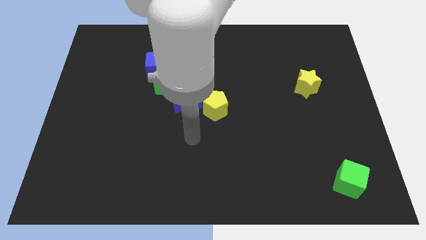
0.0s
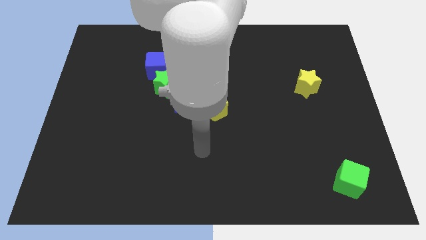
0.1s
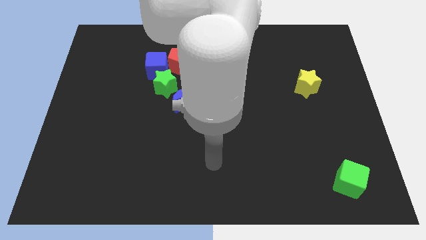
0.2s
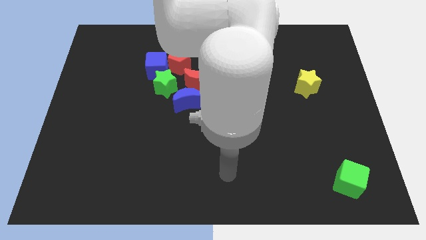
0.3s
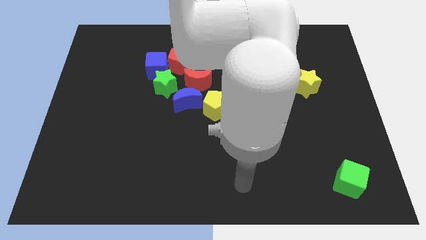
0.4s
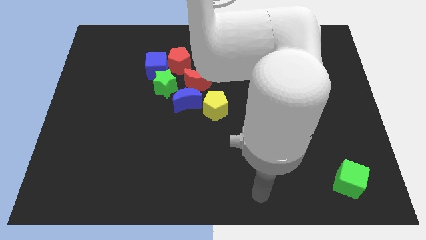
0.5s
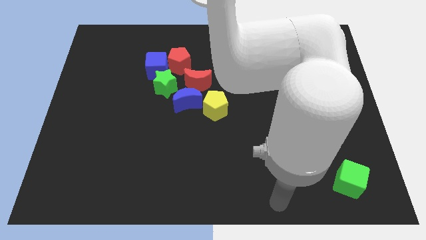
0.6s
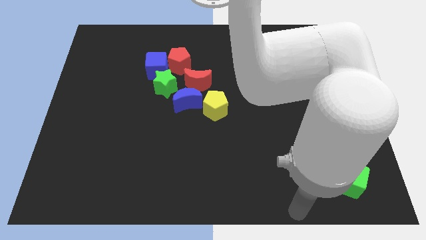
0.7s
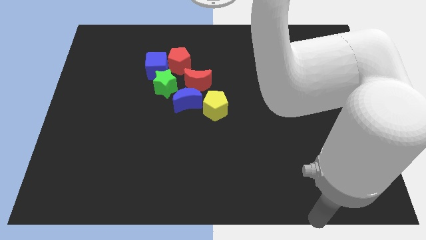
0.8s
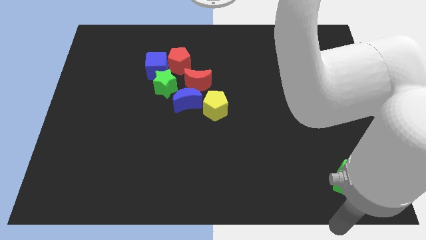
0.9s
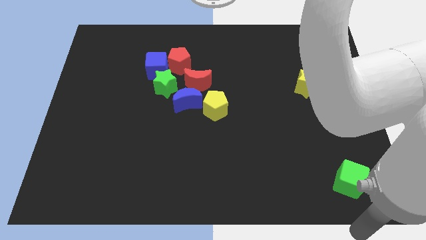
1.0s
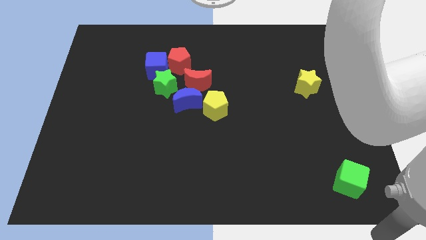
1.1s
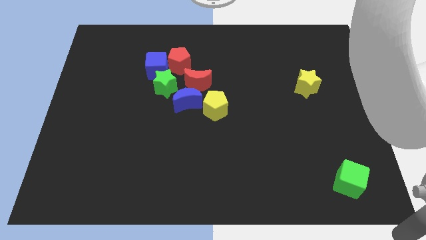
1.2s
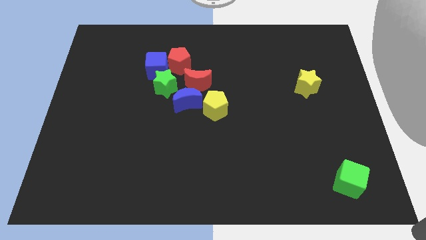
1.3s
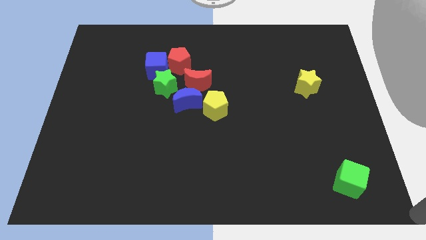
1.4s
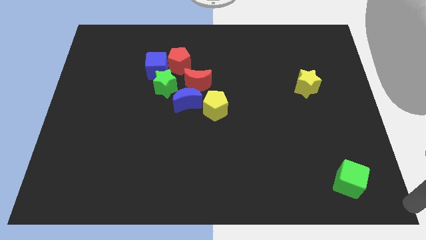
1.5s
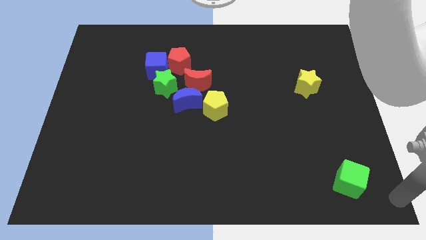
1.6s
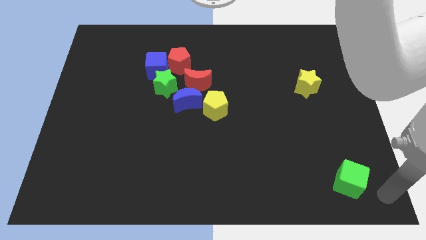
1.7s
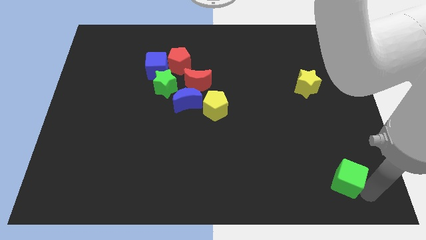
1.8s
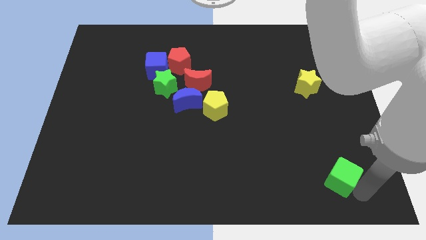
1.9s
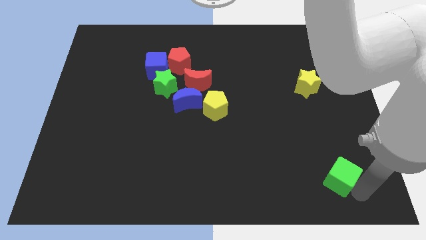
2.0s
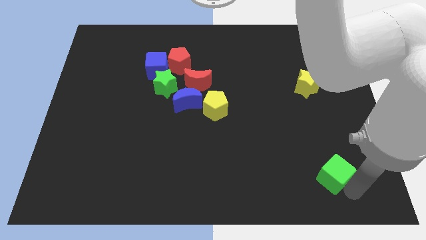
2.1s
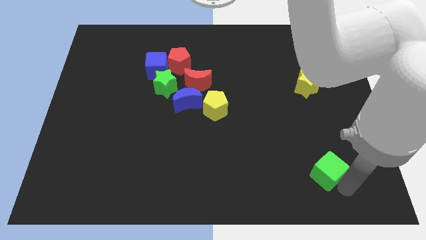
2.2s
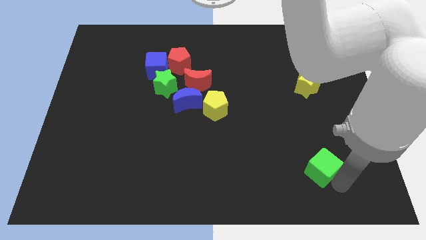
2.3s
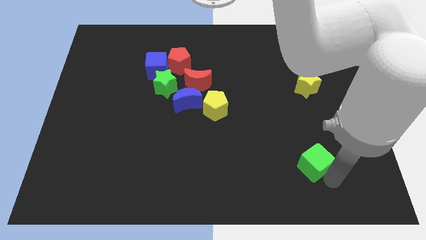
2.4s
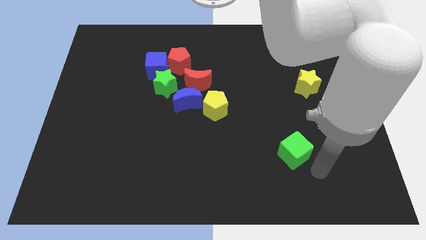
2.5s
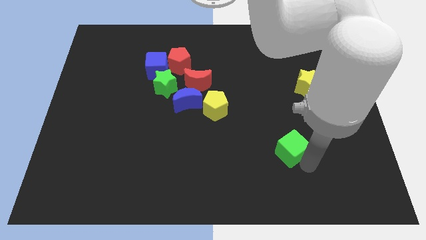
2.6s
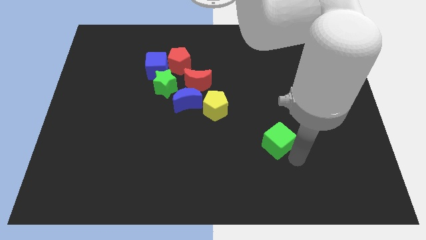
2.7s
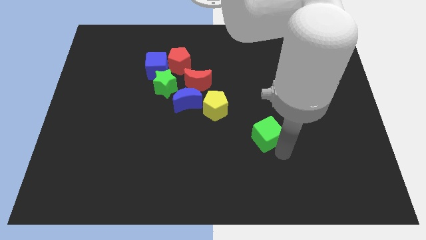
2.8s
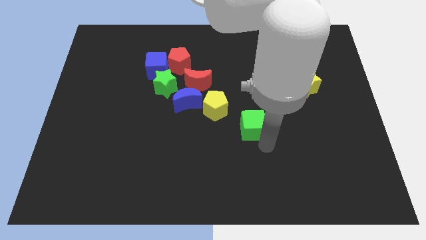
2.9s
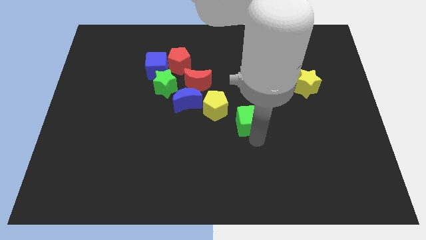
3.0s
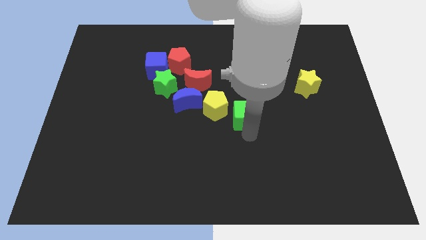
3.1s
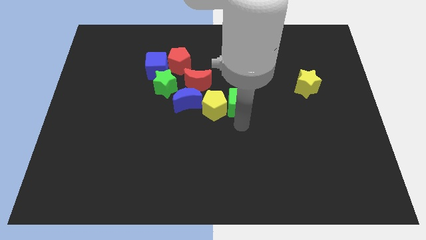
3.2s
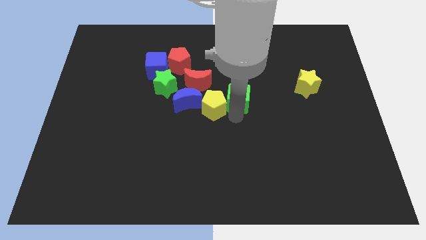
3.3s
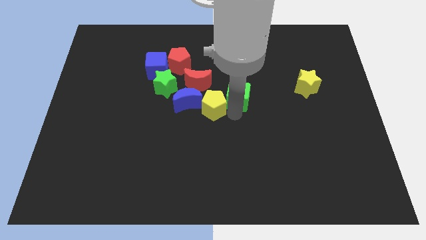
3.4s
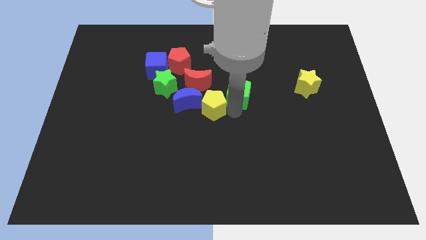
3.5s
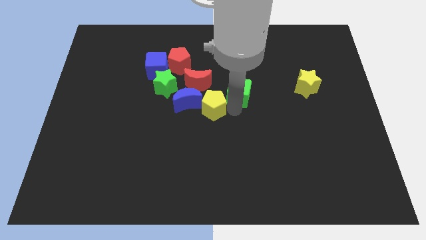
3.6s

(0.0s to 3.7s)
place the green cube in between the yellow star and yellow pentagon

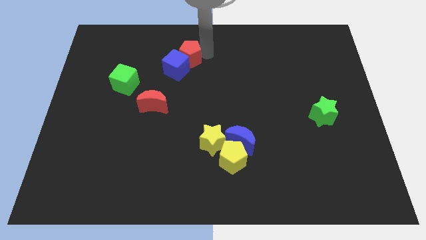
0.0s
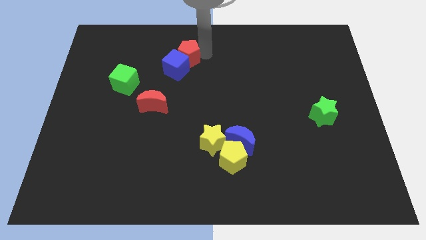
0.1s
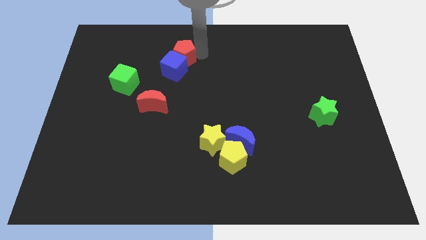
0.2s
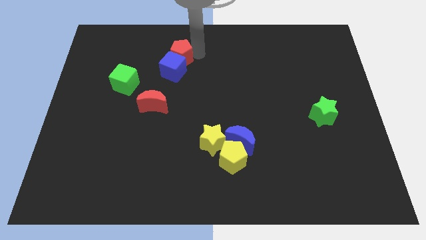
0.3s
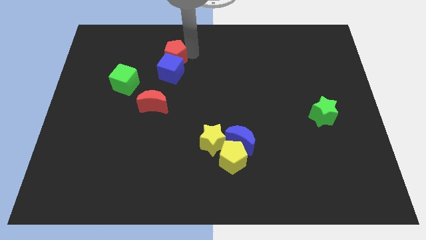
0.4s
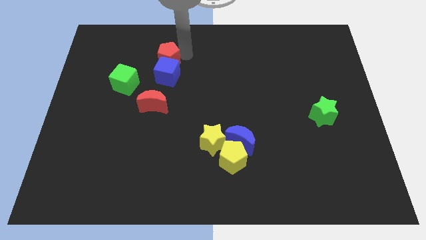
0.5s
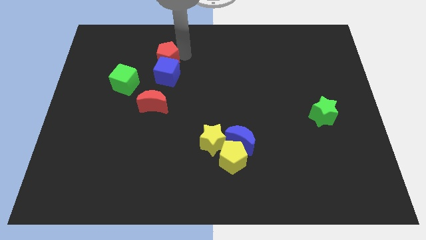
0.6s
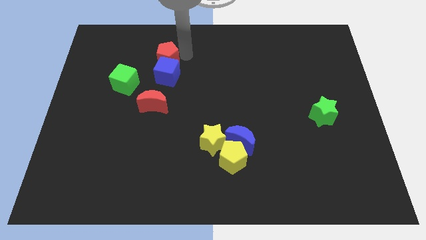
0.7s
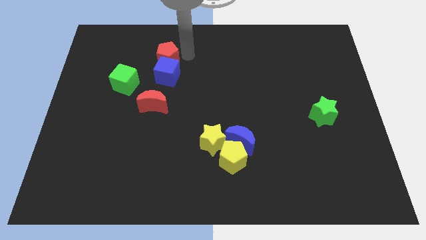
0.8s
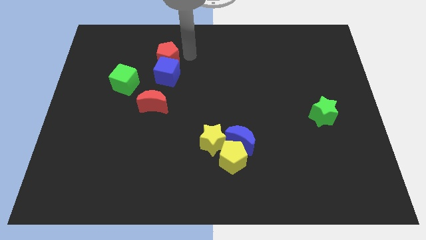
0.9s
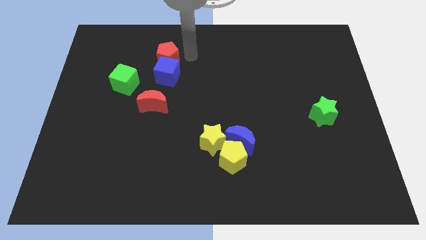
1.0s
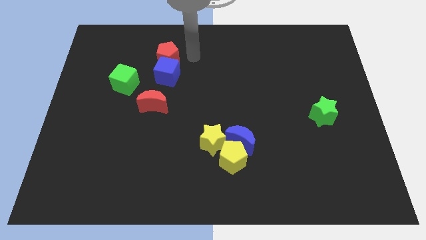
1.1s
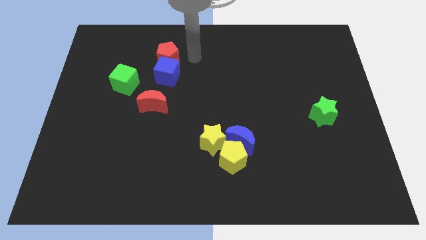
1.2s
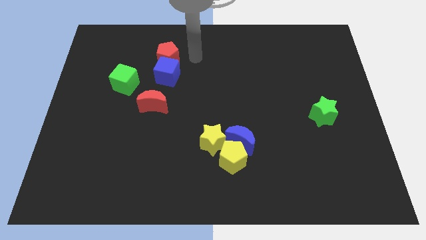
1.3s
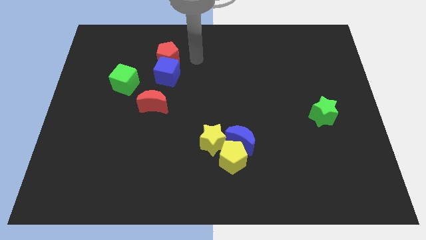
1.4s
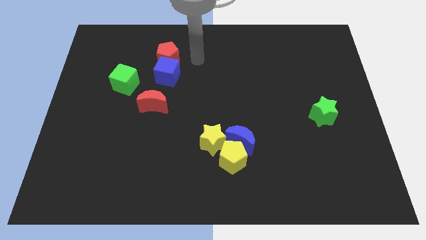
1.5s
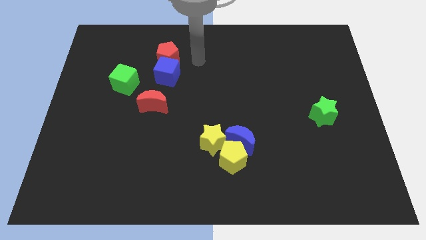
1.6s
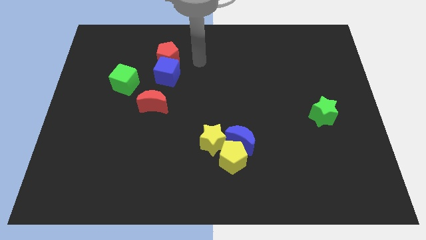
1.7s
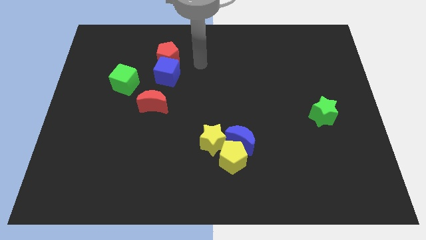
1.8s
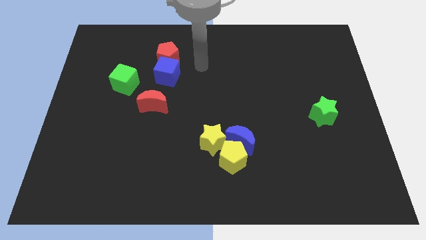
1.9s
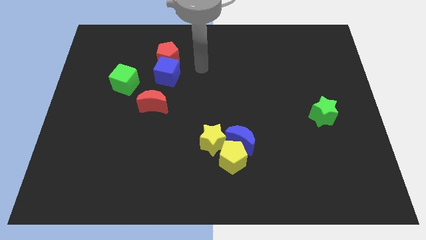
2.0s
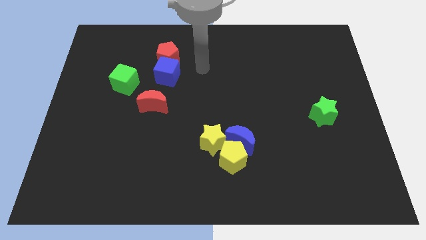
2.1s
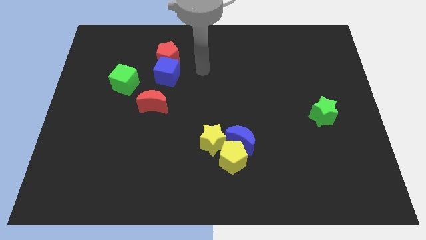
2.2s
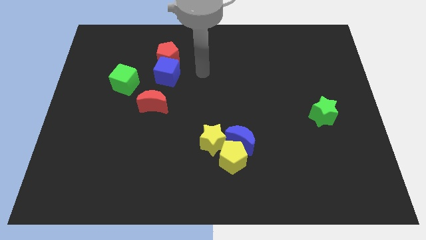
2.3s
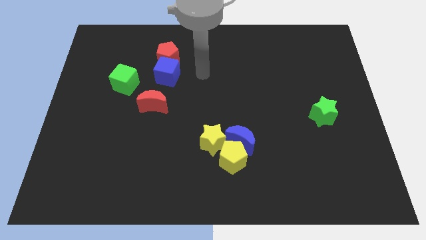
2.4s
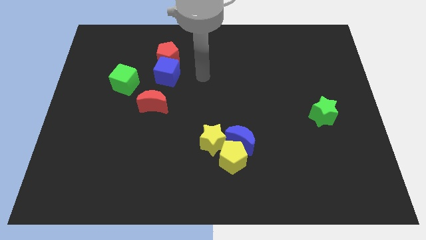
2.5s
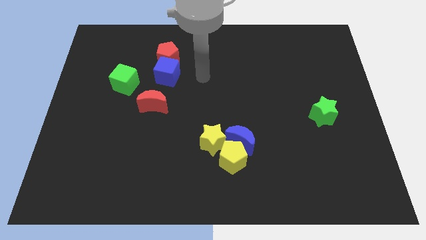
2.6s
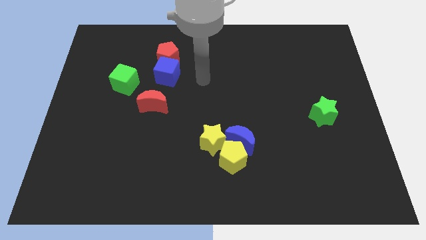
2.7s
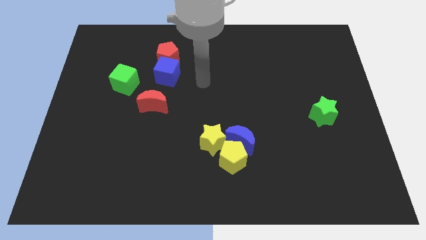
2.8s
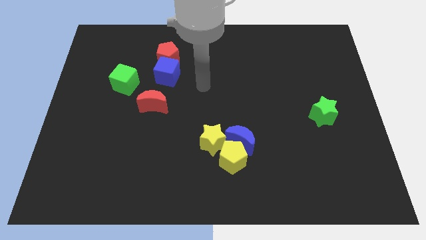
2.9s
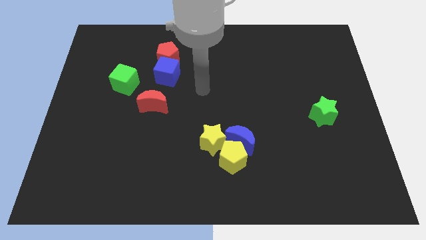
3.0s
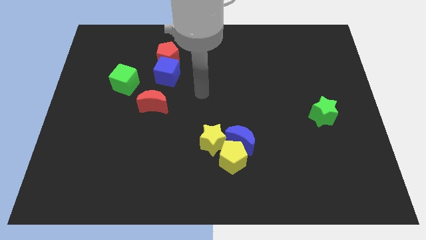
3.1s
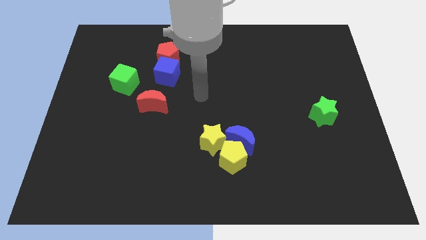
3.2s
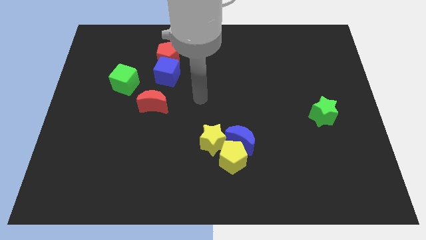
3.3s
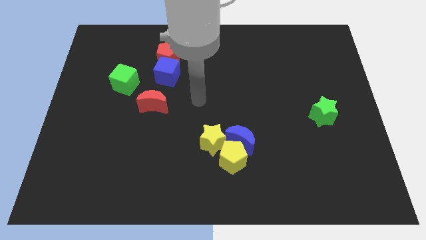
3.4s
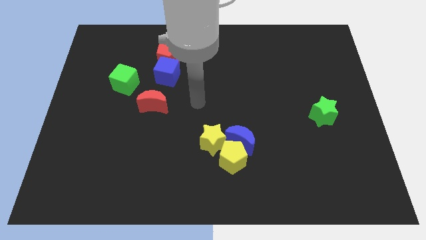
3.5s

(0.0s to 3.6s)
move the red pentagon and blue cube to the top side of the red crescent

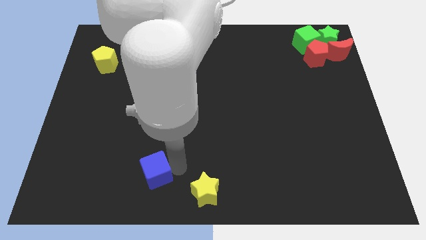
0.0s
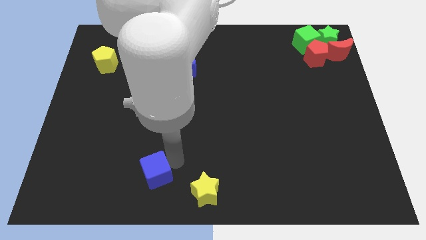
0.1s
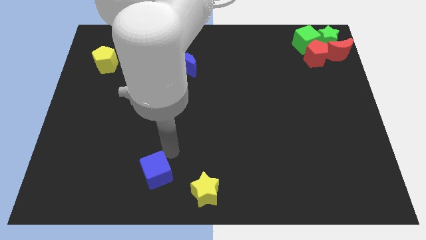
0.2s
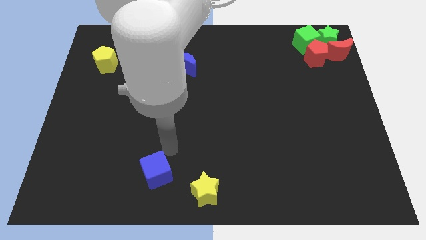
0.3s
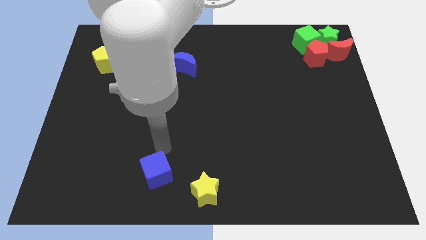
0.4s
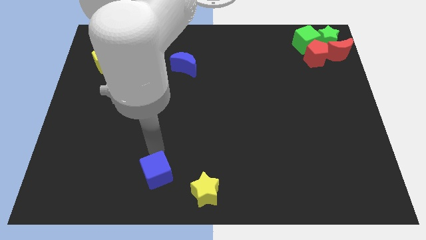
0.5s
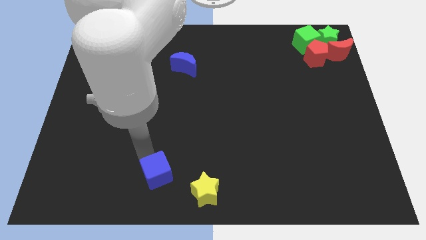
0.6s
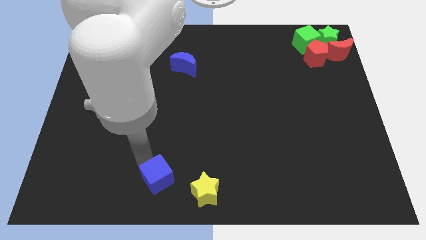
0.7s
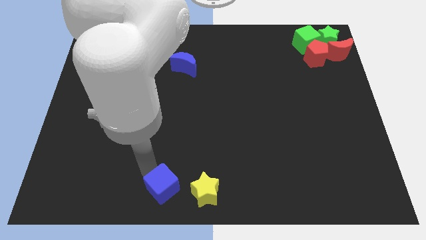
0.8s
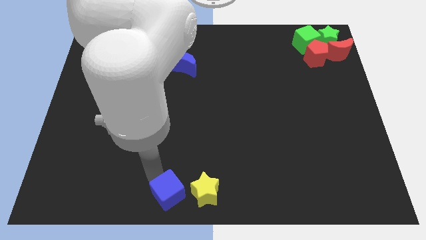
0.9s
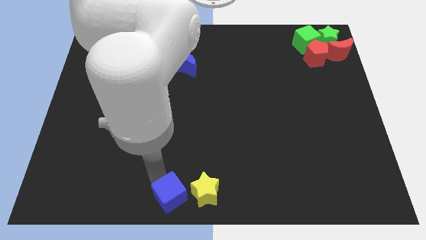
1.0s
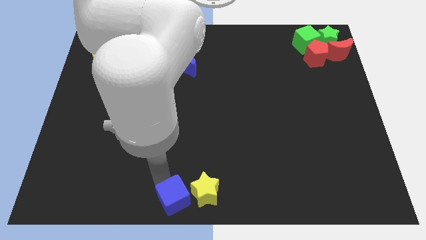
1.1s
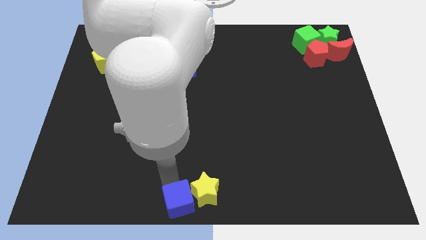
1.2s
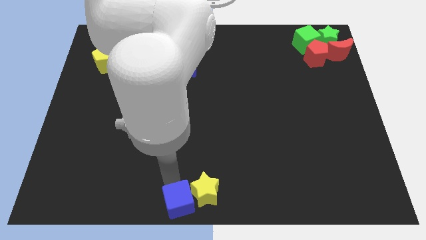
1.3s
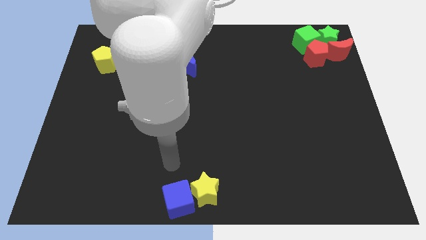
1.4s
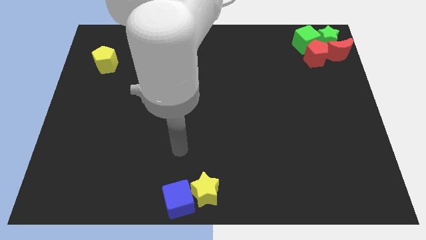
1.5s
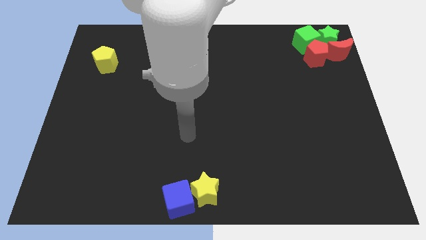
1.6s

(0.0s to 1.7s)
move the blue cube to the left of the yellow star
